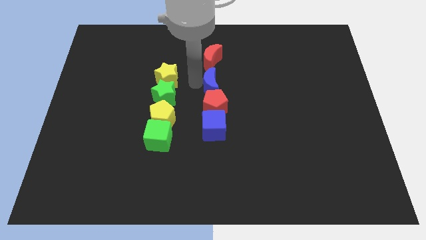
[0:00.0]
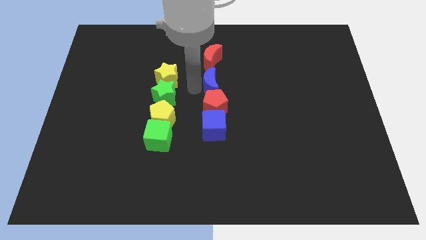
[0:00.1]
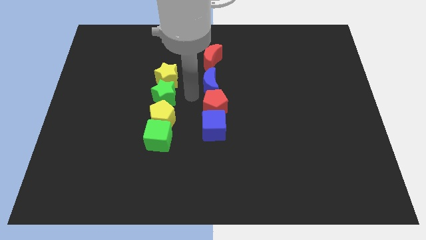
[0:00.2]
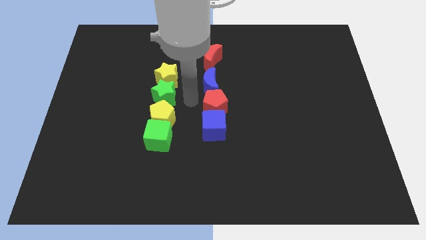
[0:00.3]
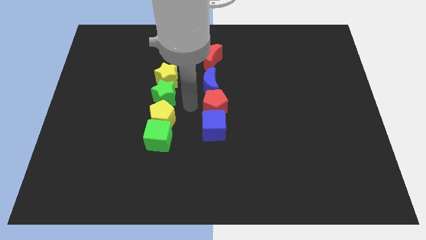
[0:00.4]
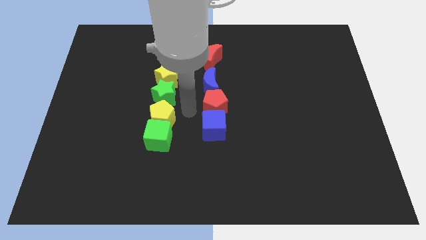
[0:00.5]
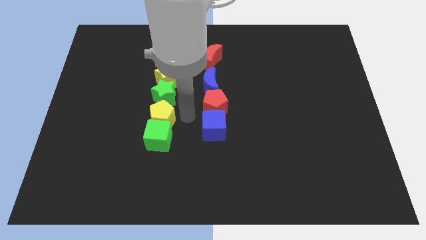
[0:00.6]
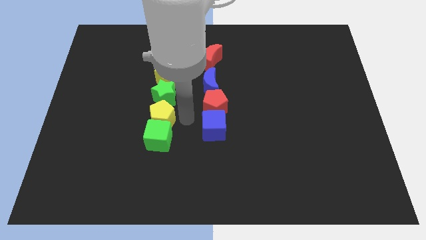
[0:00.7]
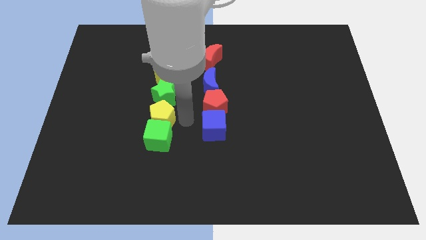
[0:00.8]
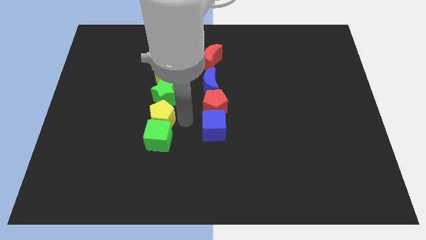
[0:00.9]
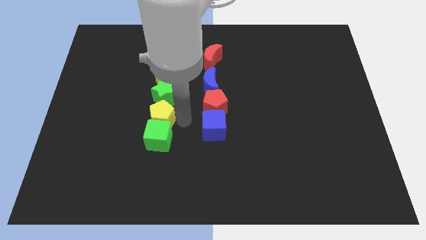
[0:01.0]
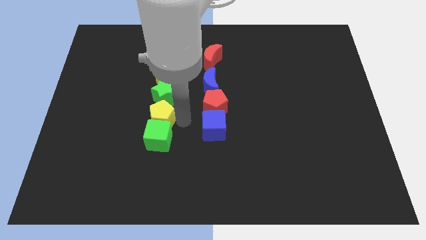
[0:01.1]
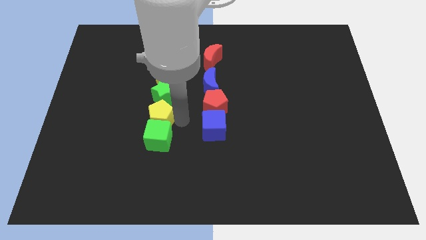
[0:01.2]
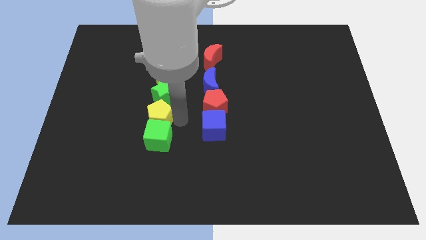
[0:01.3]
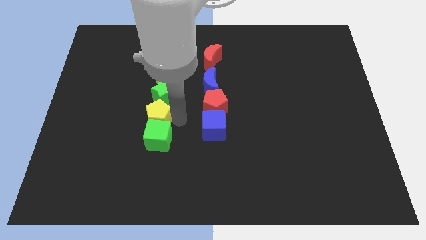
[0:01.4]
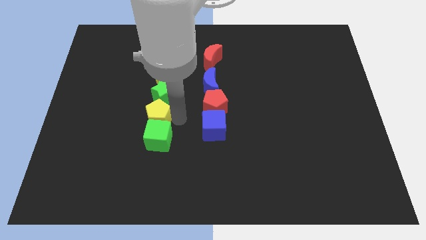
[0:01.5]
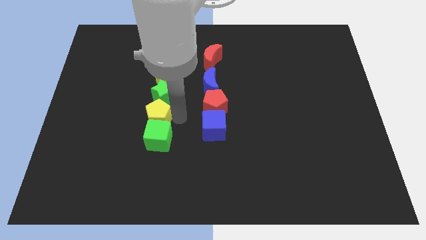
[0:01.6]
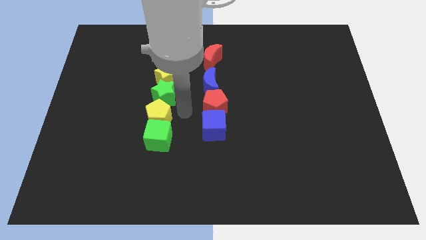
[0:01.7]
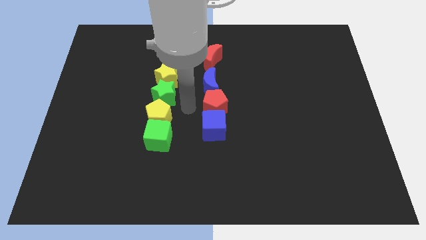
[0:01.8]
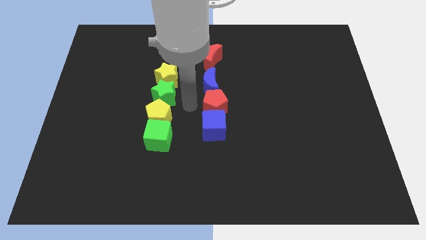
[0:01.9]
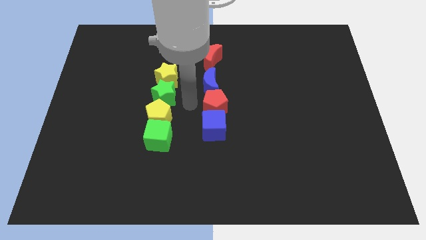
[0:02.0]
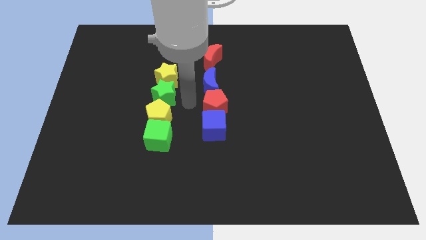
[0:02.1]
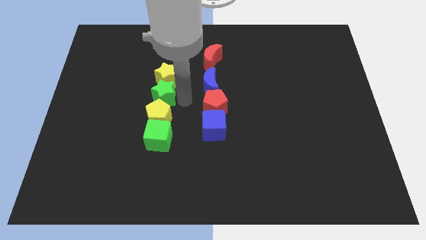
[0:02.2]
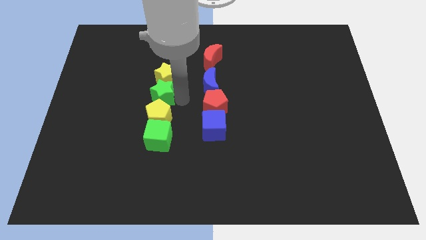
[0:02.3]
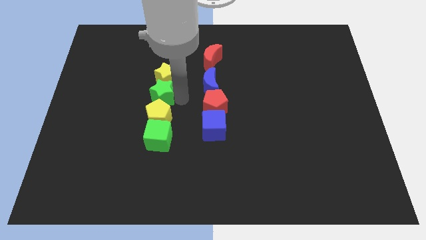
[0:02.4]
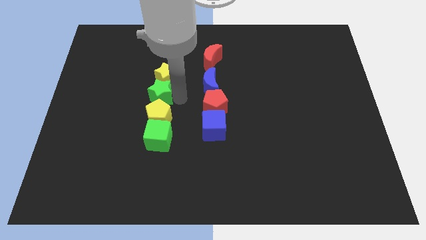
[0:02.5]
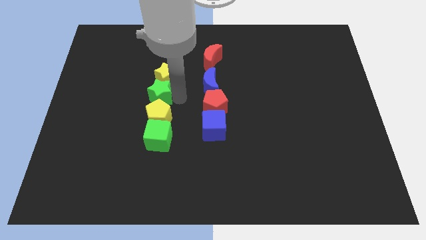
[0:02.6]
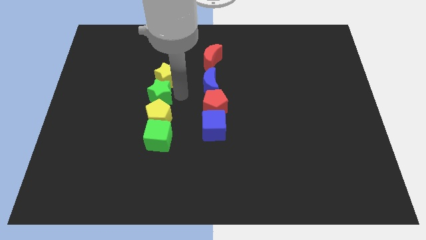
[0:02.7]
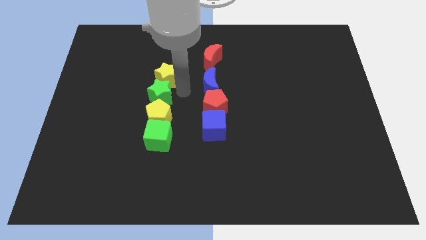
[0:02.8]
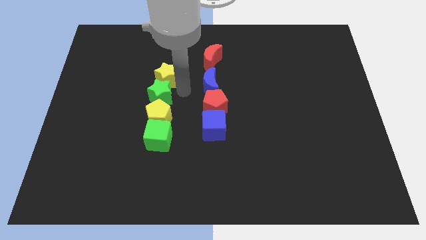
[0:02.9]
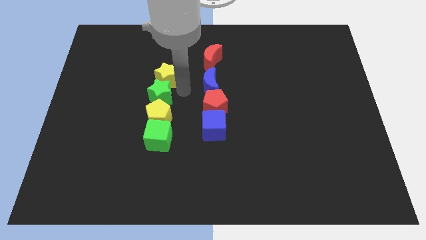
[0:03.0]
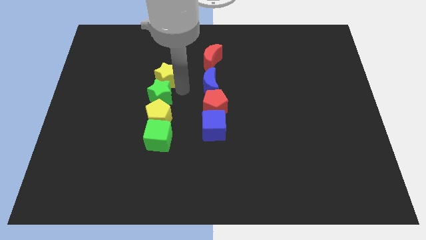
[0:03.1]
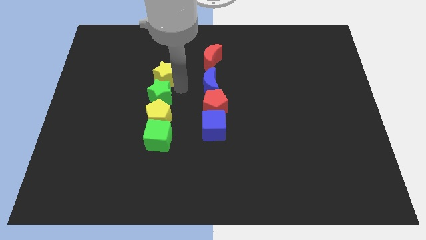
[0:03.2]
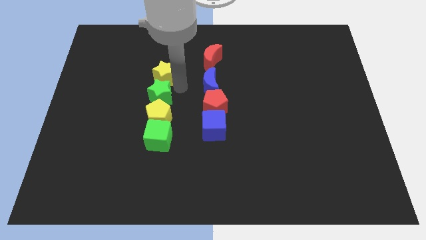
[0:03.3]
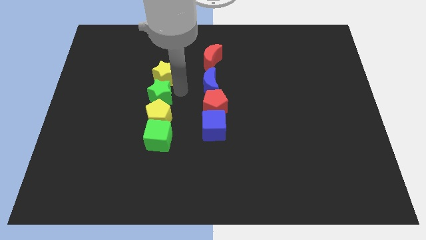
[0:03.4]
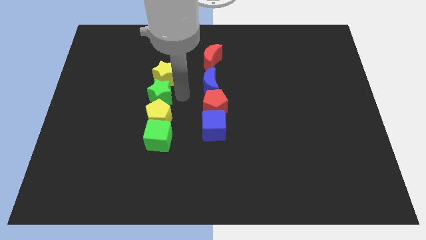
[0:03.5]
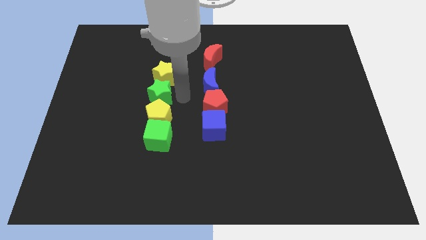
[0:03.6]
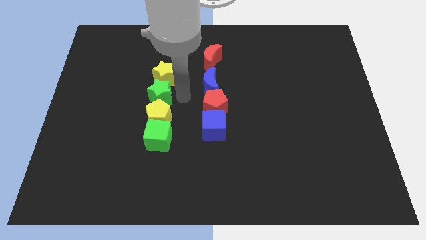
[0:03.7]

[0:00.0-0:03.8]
set the group of yellow and green blocks in a vertical line on the left side of the board

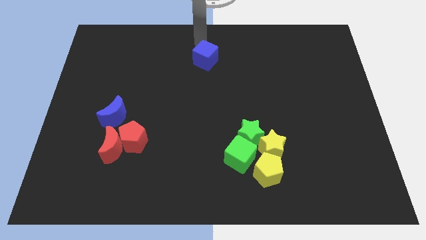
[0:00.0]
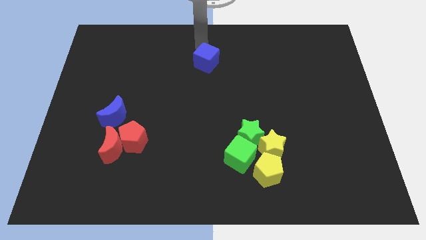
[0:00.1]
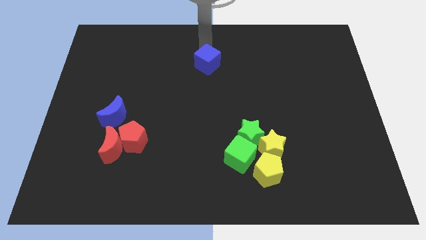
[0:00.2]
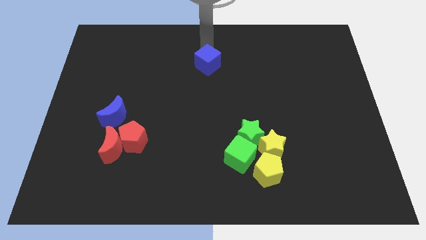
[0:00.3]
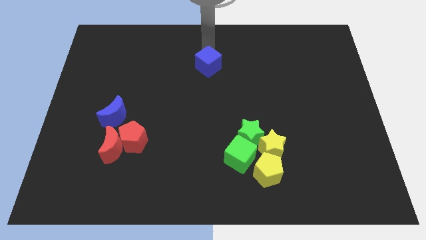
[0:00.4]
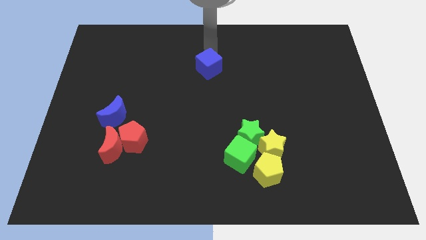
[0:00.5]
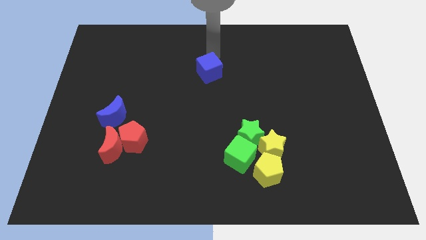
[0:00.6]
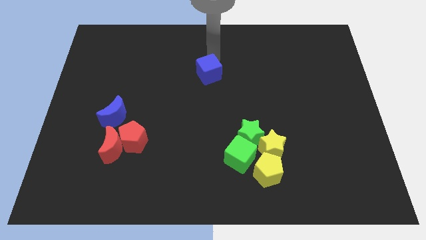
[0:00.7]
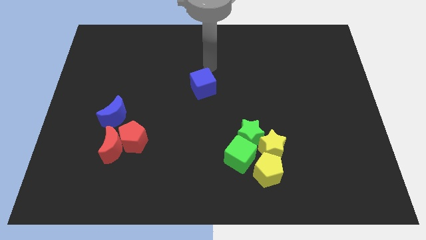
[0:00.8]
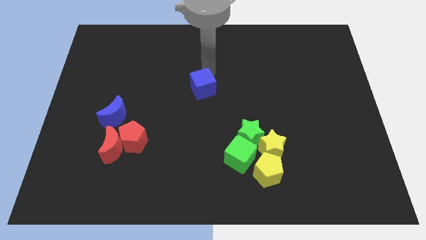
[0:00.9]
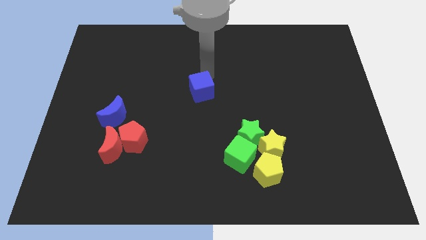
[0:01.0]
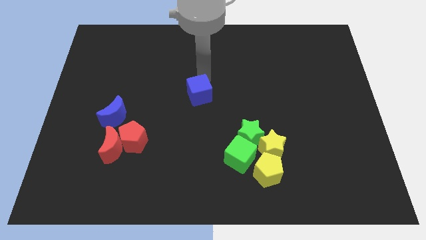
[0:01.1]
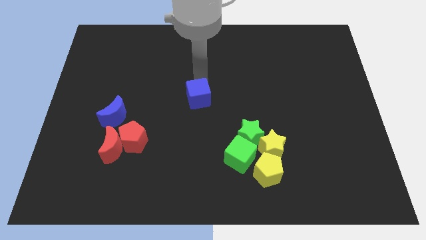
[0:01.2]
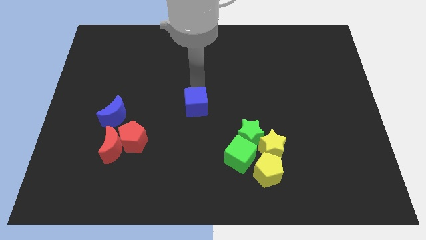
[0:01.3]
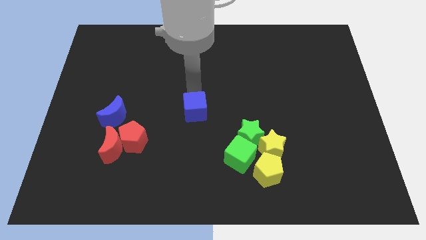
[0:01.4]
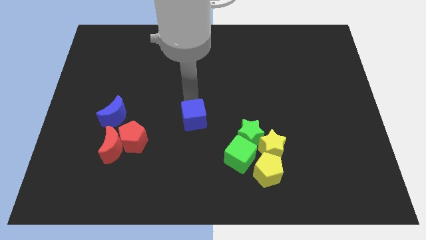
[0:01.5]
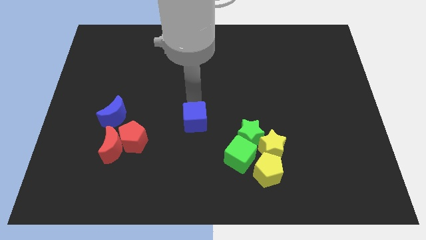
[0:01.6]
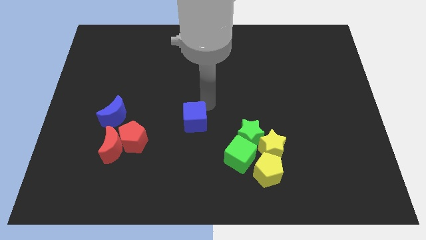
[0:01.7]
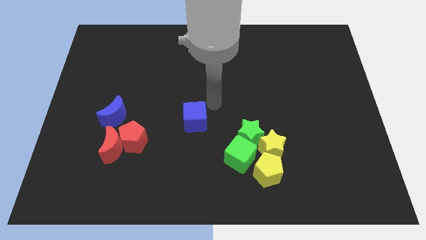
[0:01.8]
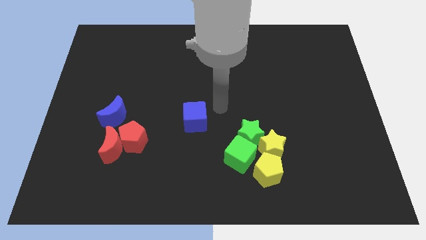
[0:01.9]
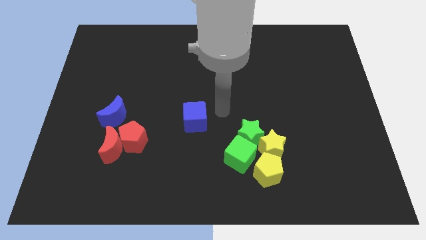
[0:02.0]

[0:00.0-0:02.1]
place blue cube at the center

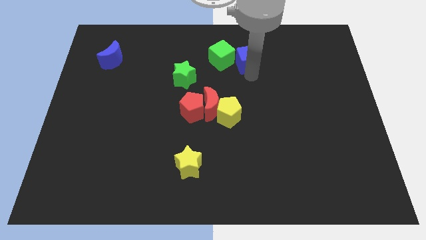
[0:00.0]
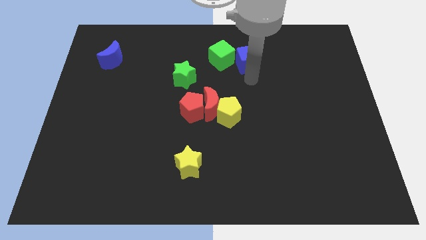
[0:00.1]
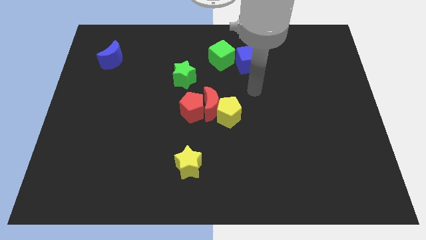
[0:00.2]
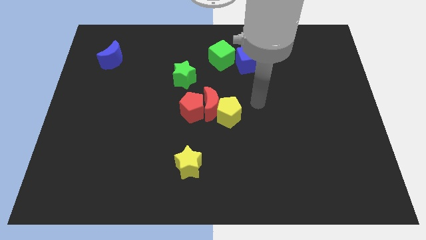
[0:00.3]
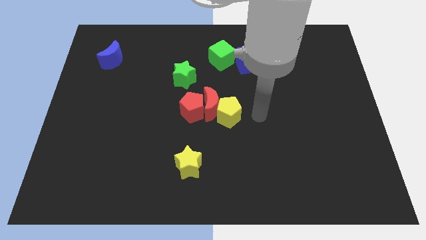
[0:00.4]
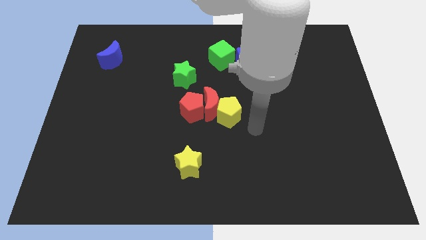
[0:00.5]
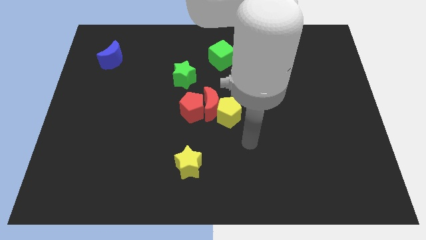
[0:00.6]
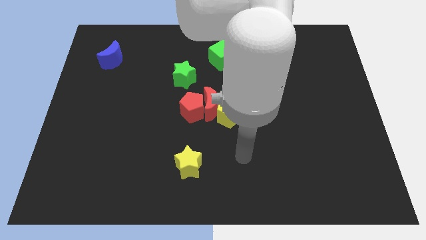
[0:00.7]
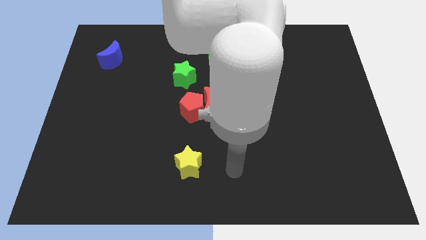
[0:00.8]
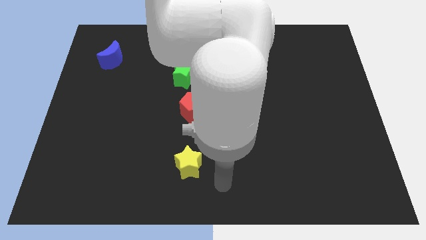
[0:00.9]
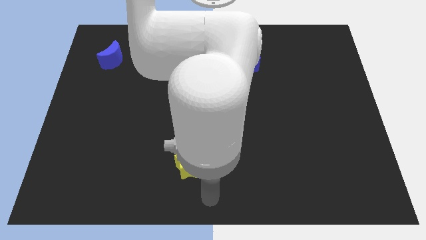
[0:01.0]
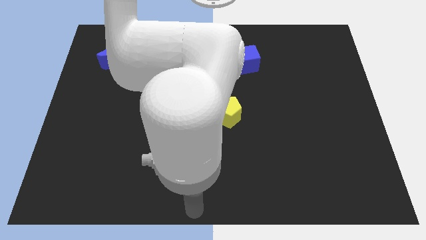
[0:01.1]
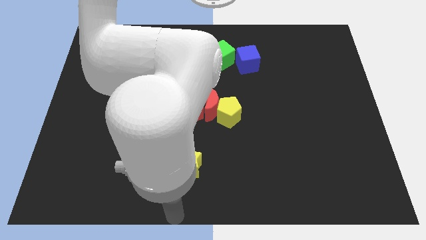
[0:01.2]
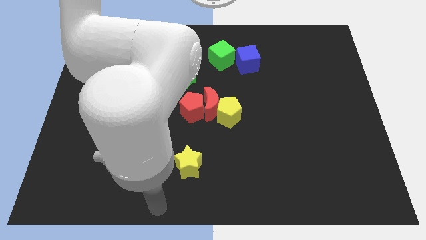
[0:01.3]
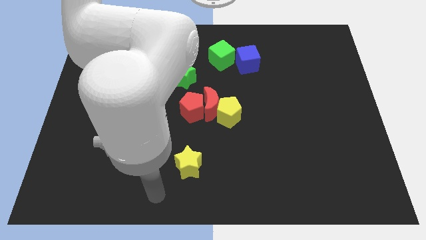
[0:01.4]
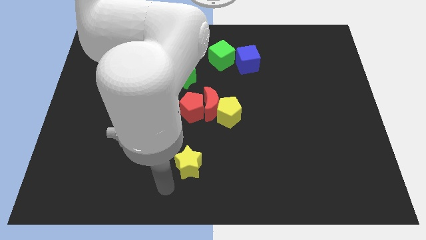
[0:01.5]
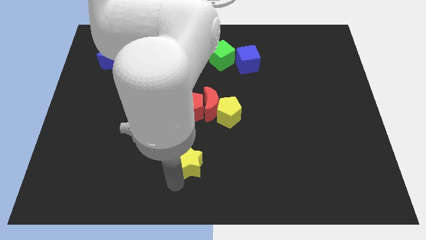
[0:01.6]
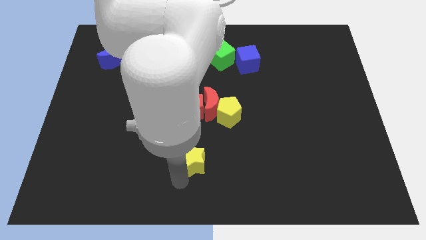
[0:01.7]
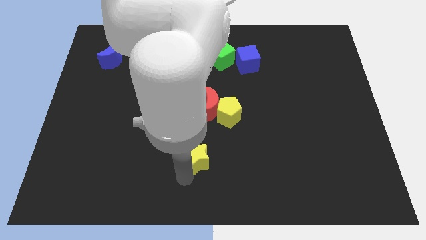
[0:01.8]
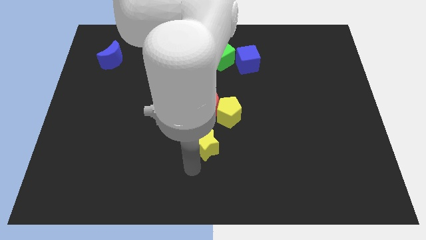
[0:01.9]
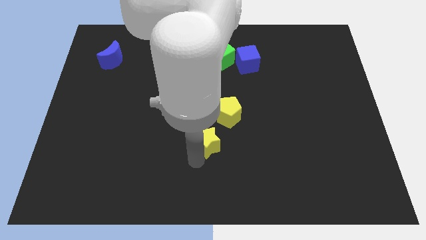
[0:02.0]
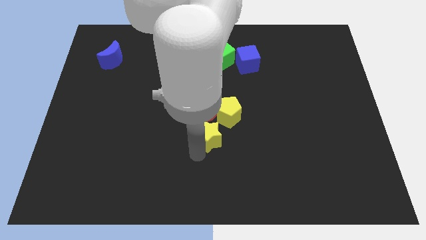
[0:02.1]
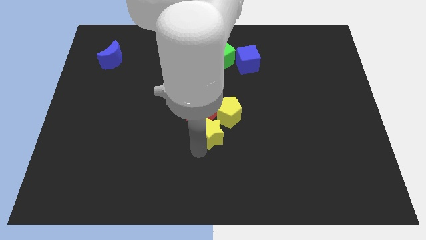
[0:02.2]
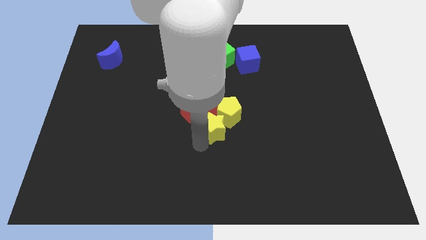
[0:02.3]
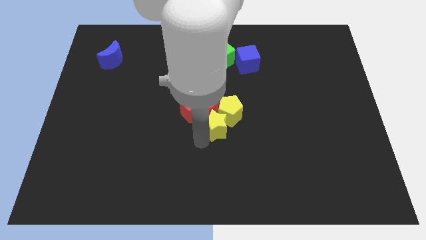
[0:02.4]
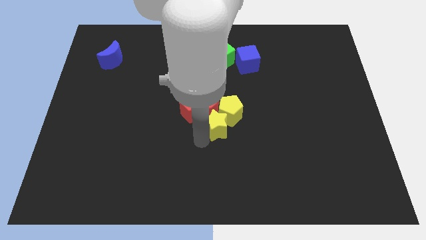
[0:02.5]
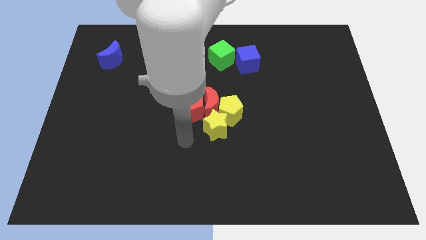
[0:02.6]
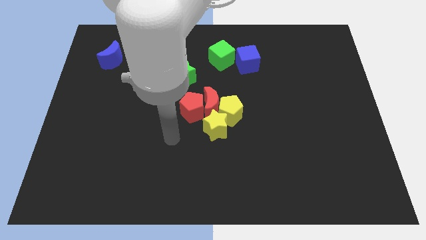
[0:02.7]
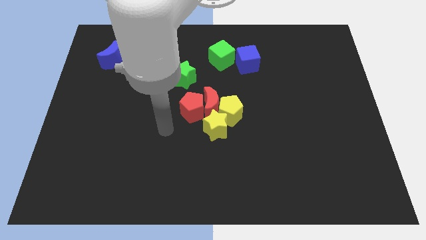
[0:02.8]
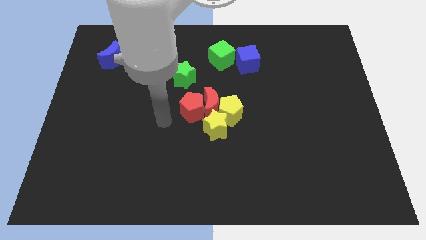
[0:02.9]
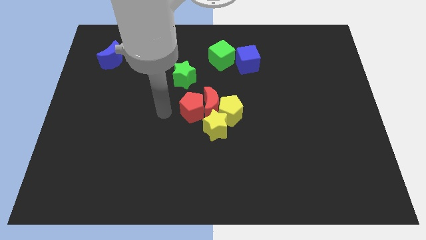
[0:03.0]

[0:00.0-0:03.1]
move yellow star to the yellow pentagon

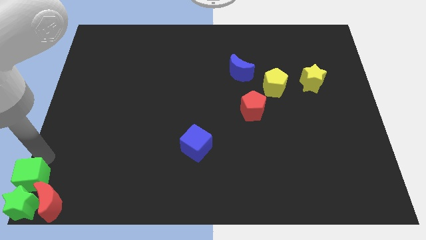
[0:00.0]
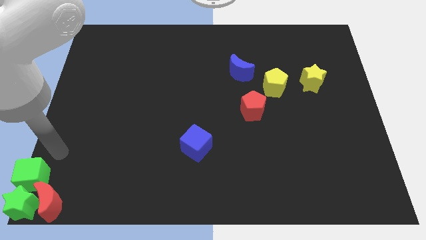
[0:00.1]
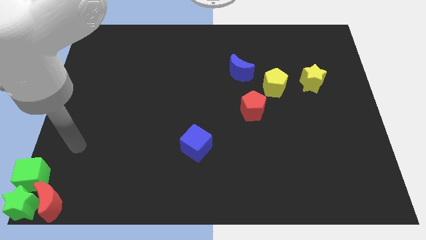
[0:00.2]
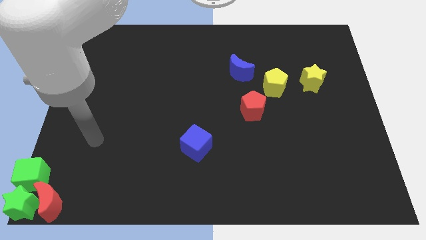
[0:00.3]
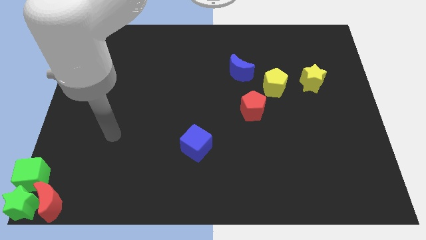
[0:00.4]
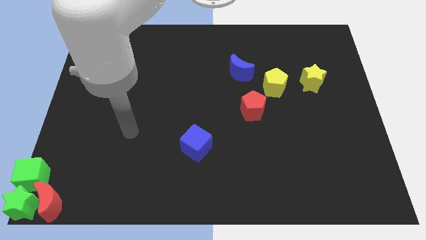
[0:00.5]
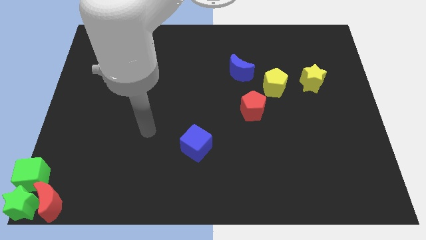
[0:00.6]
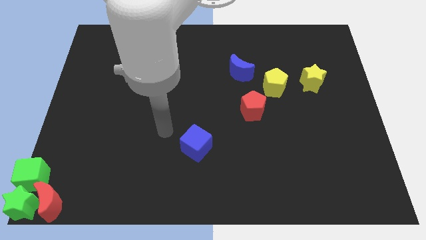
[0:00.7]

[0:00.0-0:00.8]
move the arm away from the green cube
